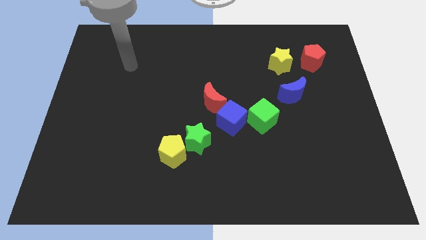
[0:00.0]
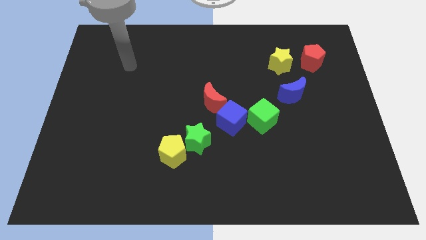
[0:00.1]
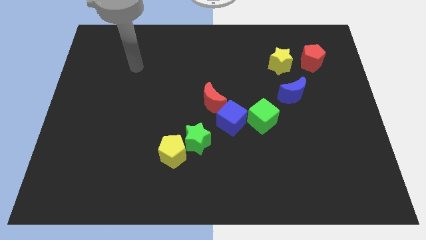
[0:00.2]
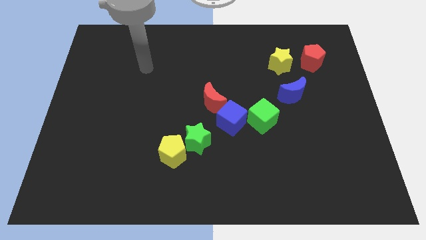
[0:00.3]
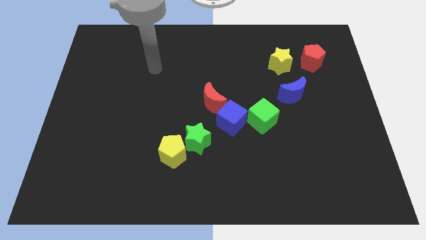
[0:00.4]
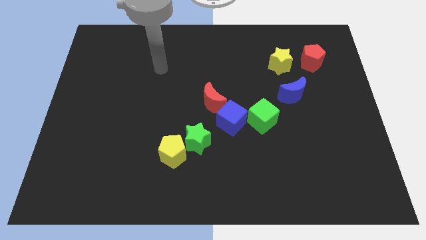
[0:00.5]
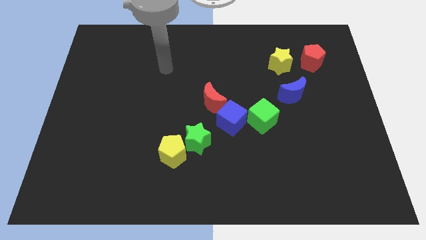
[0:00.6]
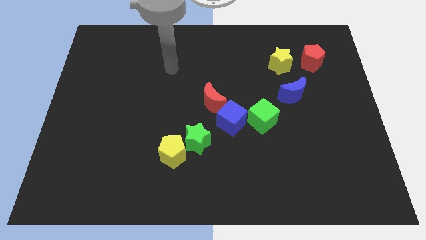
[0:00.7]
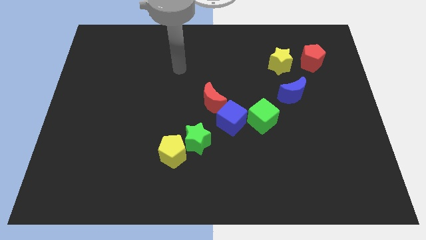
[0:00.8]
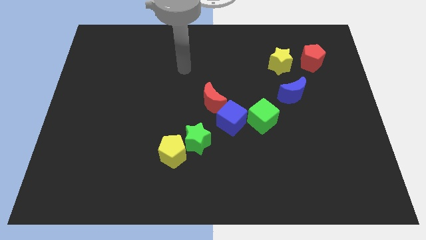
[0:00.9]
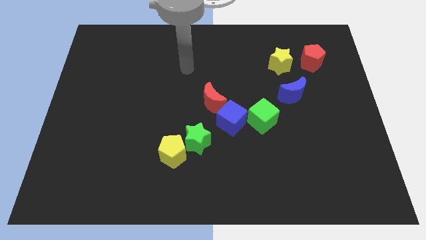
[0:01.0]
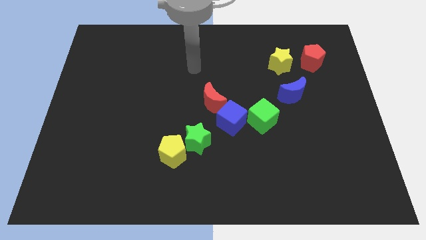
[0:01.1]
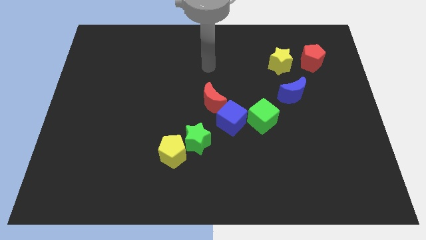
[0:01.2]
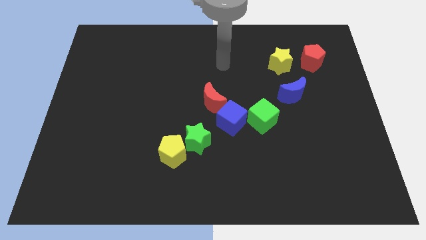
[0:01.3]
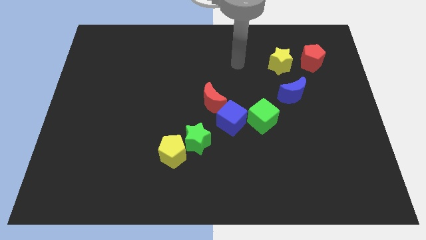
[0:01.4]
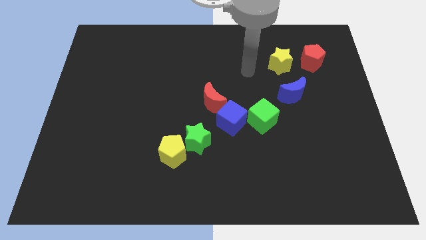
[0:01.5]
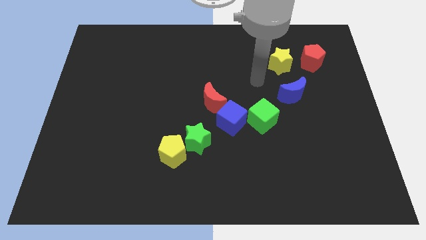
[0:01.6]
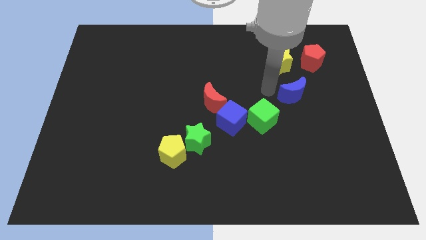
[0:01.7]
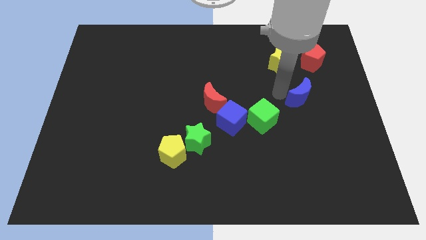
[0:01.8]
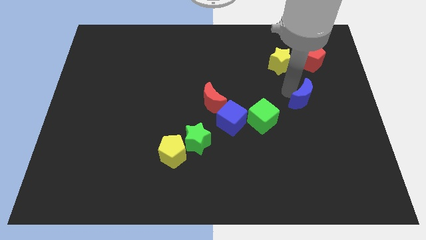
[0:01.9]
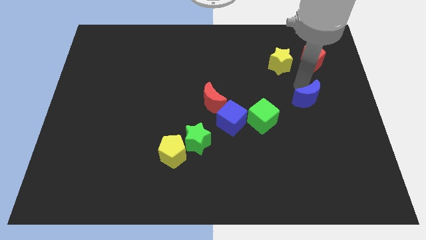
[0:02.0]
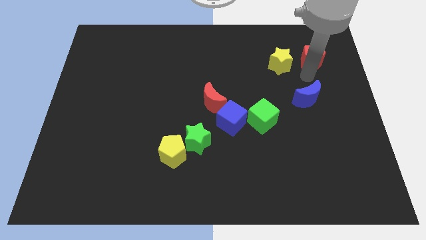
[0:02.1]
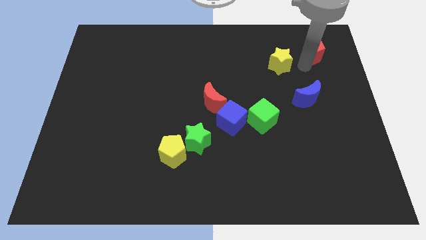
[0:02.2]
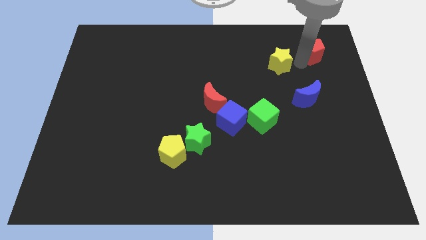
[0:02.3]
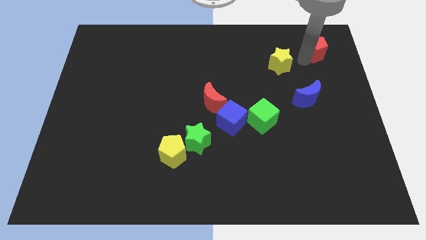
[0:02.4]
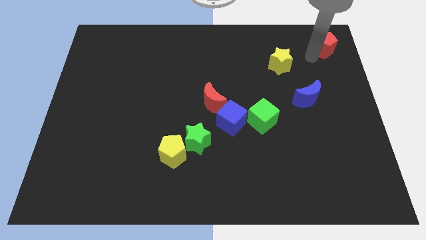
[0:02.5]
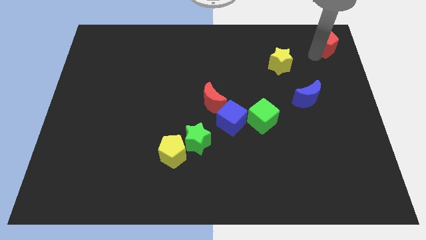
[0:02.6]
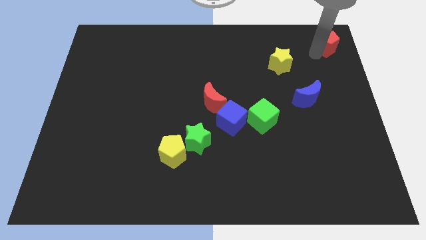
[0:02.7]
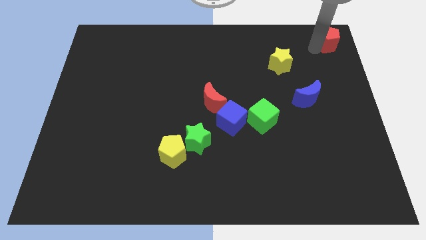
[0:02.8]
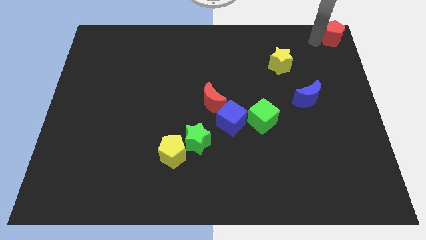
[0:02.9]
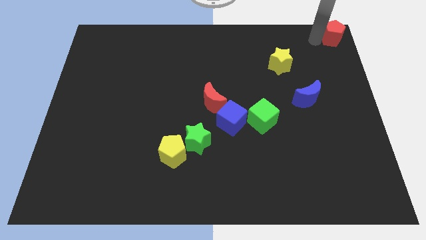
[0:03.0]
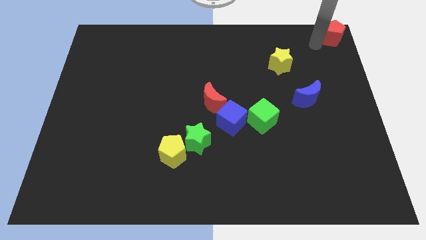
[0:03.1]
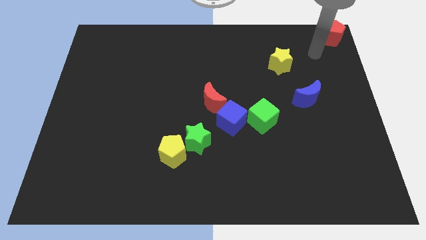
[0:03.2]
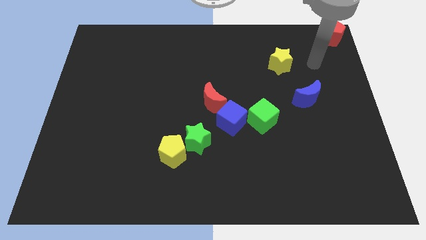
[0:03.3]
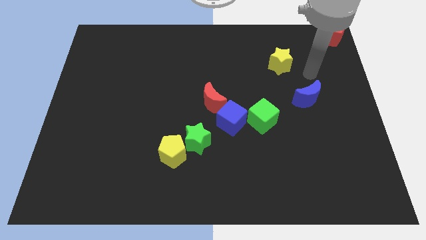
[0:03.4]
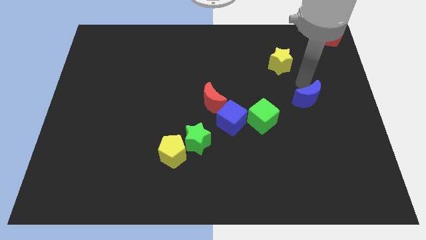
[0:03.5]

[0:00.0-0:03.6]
move the red pentagon to the top right

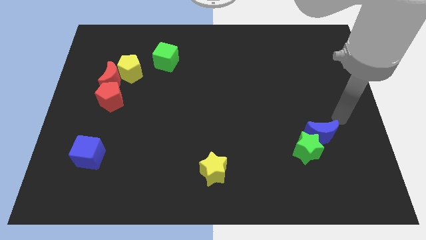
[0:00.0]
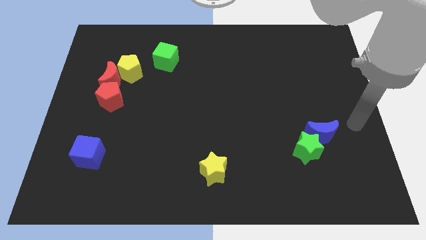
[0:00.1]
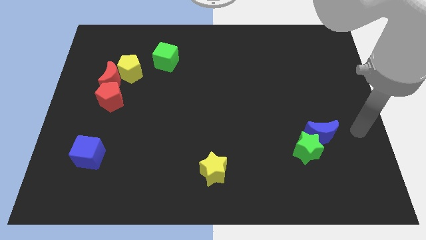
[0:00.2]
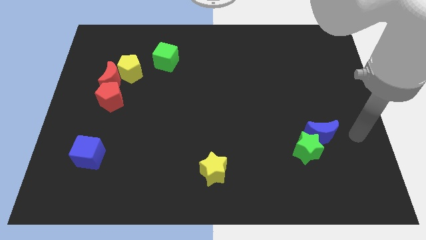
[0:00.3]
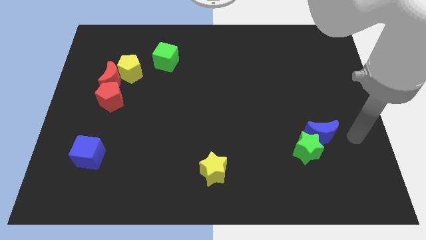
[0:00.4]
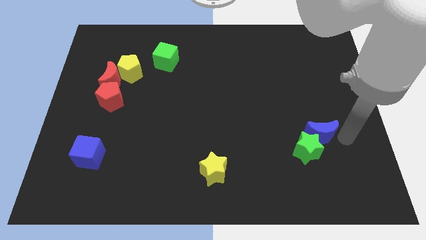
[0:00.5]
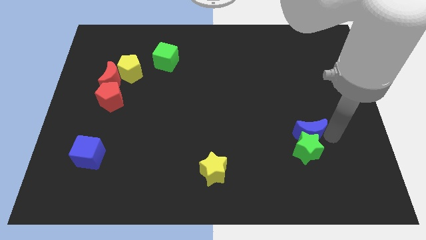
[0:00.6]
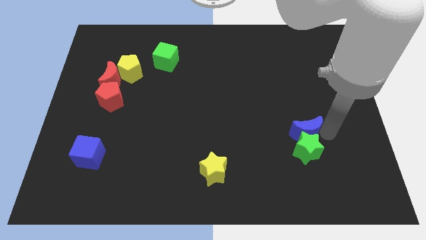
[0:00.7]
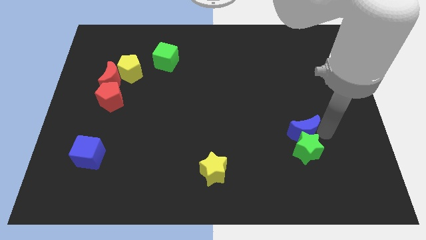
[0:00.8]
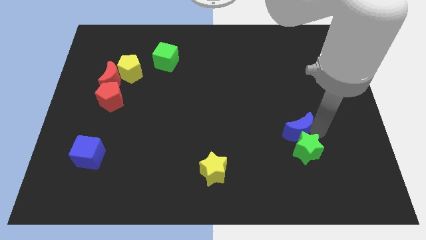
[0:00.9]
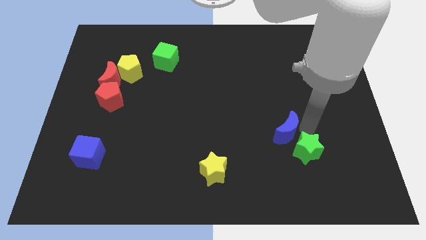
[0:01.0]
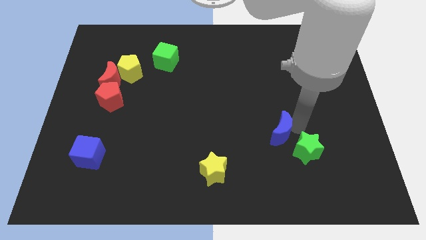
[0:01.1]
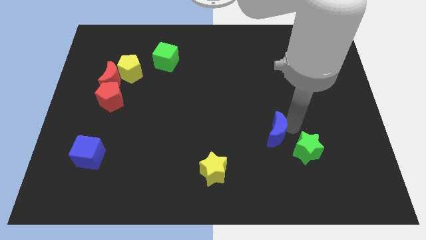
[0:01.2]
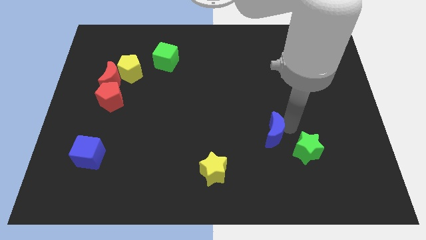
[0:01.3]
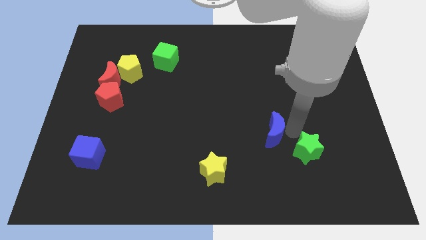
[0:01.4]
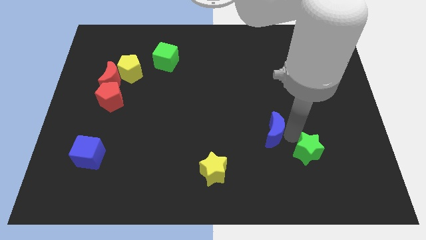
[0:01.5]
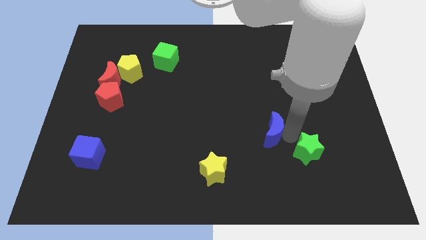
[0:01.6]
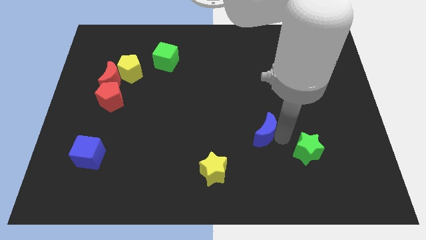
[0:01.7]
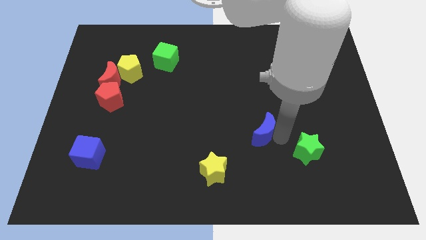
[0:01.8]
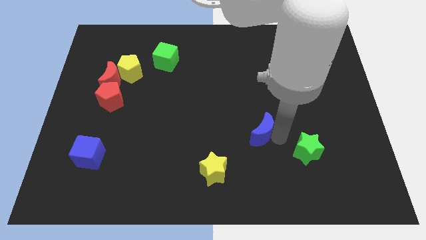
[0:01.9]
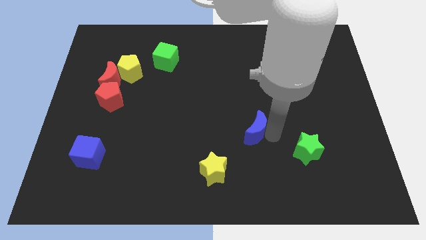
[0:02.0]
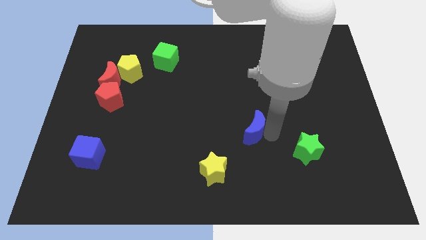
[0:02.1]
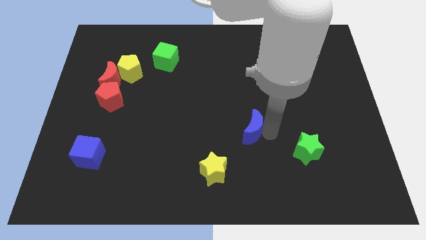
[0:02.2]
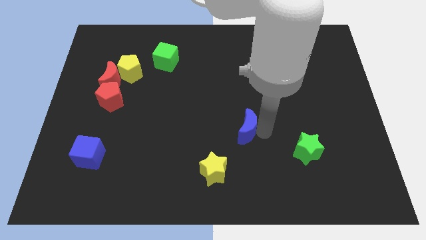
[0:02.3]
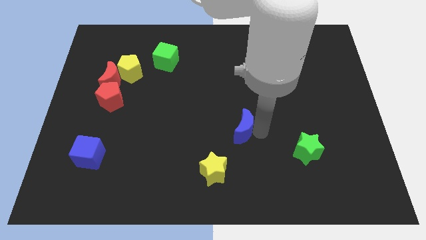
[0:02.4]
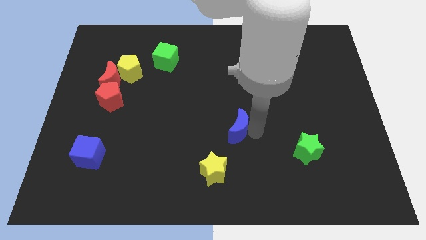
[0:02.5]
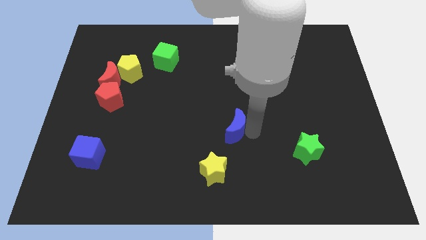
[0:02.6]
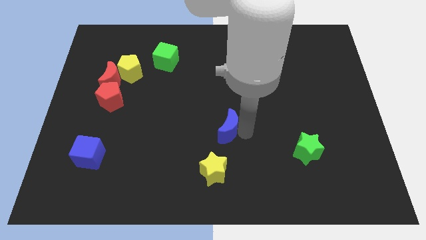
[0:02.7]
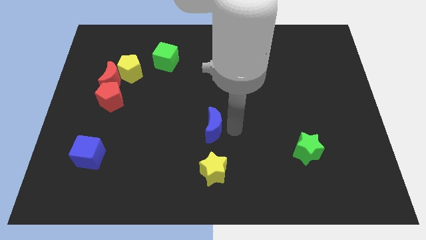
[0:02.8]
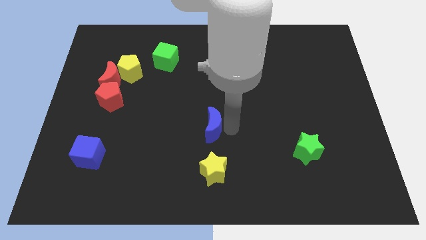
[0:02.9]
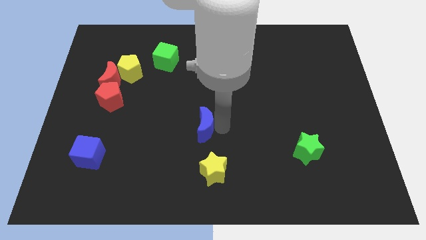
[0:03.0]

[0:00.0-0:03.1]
push the blue crescent to the top of the yellow star

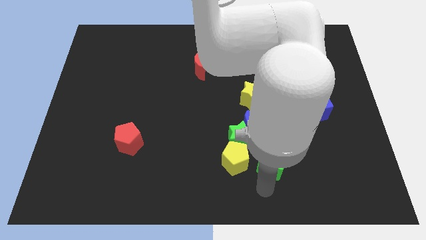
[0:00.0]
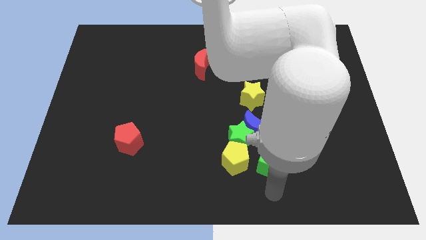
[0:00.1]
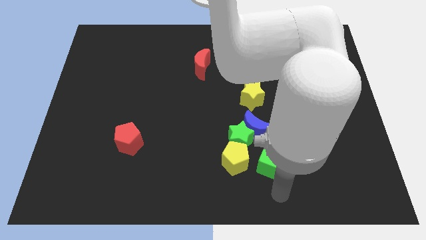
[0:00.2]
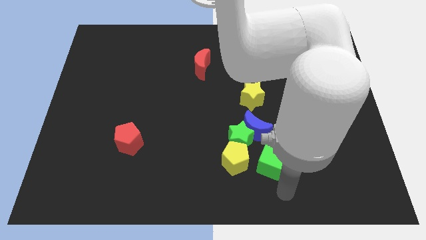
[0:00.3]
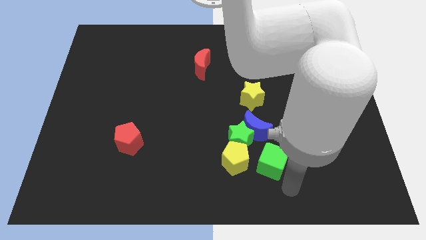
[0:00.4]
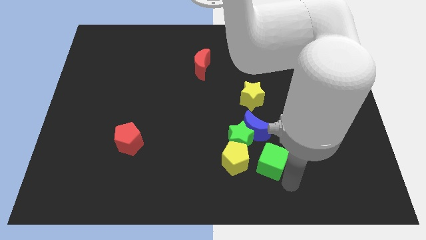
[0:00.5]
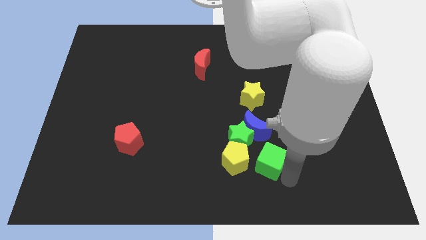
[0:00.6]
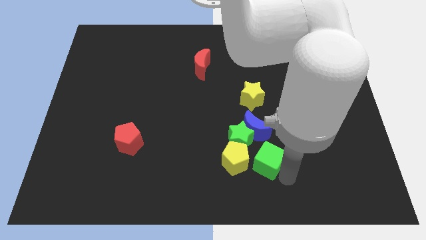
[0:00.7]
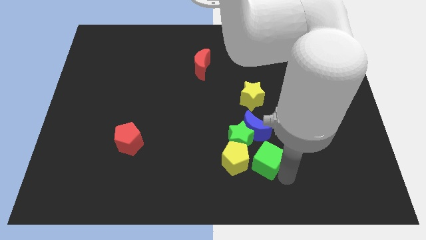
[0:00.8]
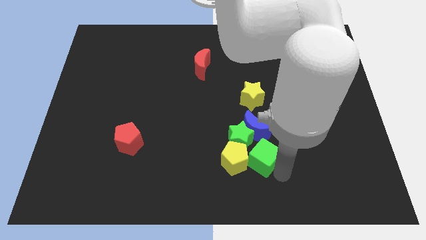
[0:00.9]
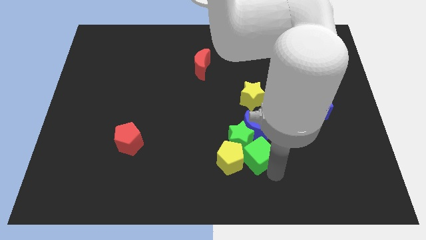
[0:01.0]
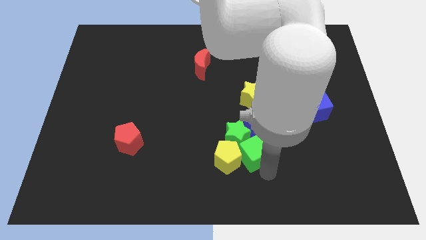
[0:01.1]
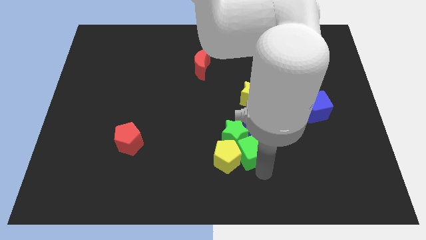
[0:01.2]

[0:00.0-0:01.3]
push the green cube into the green star

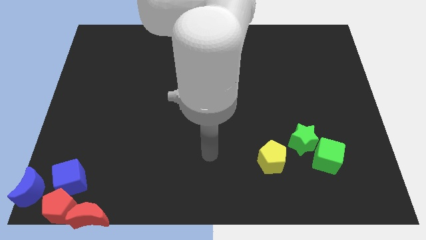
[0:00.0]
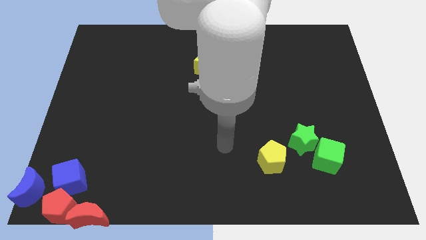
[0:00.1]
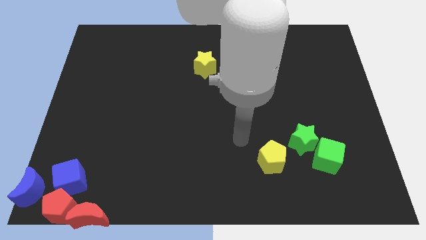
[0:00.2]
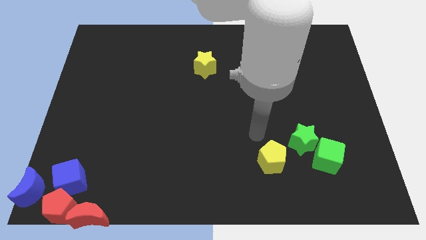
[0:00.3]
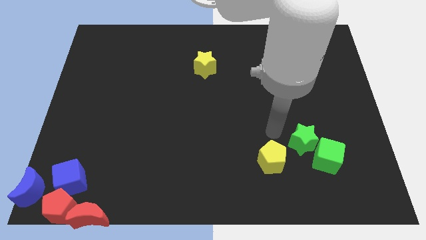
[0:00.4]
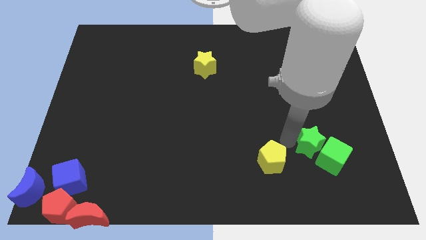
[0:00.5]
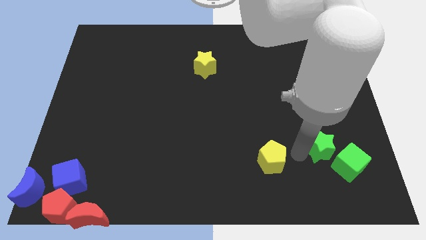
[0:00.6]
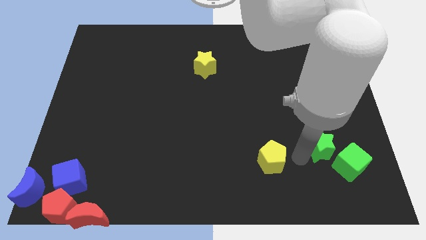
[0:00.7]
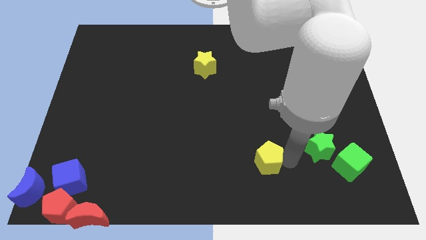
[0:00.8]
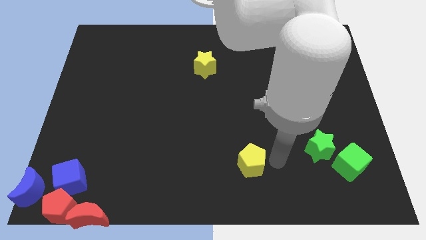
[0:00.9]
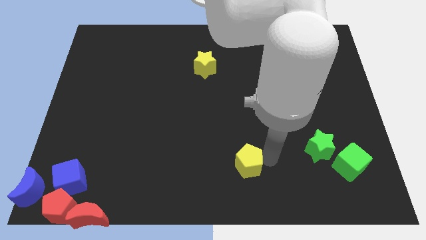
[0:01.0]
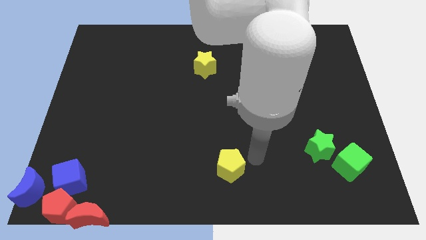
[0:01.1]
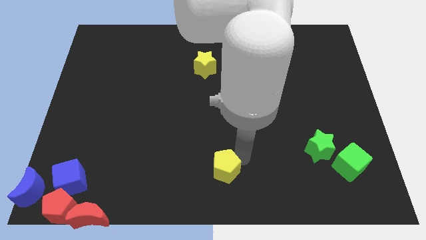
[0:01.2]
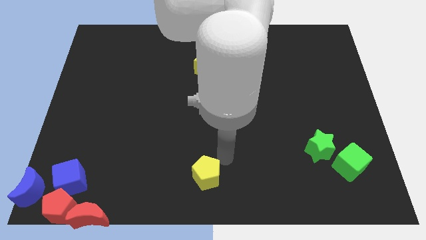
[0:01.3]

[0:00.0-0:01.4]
put the yellow pentagon to the bottom center of the board
